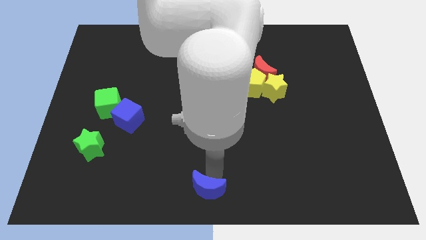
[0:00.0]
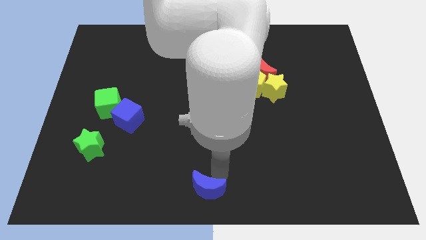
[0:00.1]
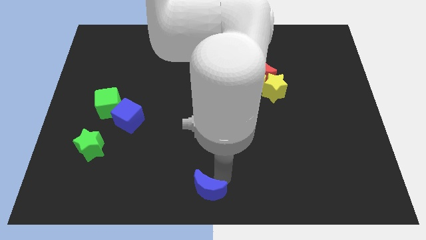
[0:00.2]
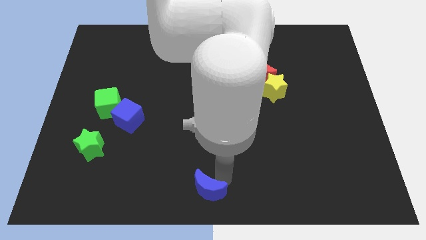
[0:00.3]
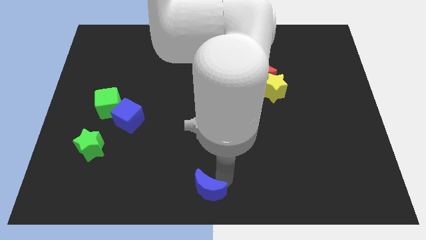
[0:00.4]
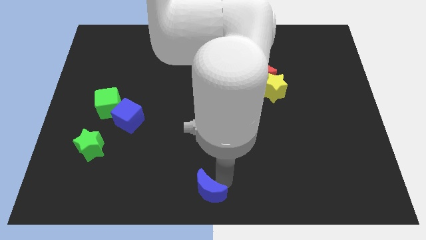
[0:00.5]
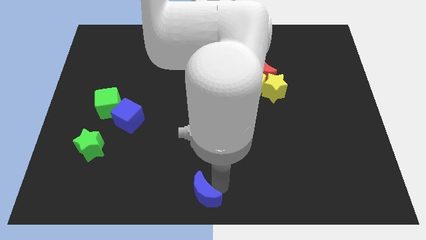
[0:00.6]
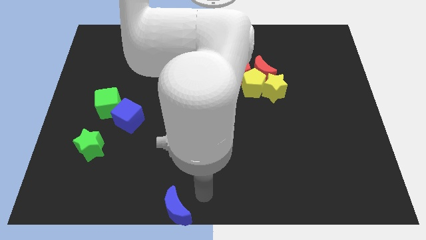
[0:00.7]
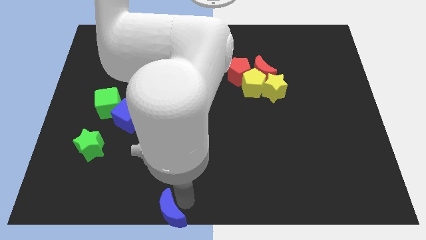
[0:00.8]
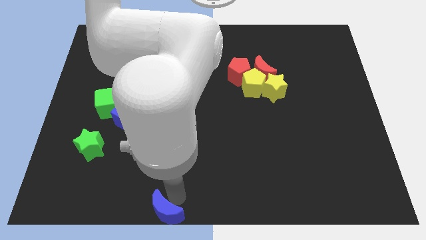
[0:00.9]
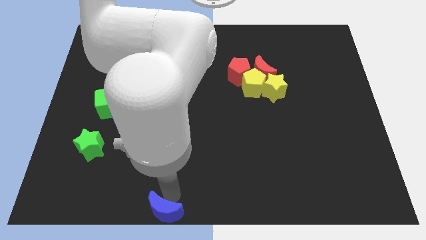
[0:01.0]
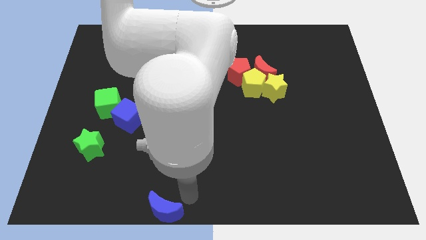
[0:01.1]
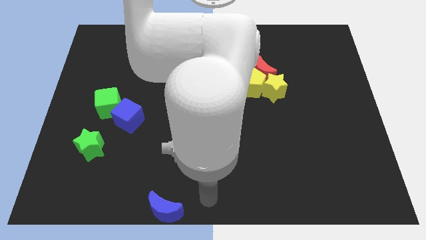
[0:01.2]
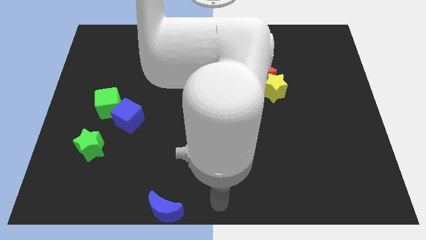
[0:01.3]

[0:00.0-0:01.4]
push the blue moon at bottom center

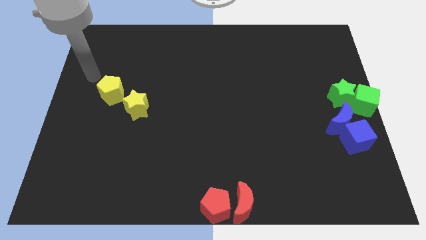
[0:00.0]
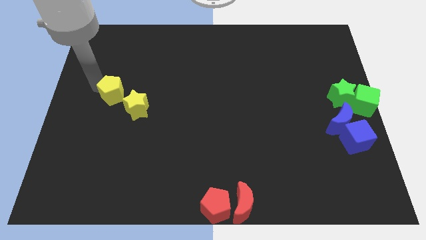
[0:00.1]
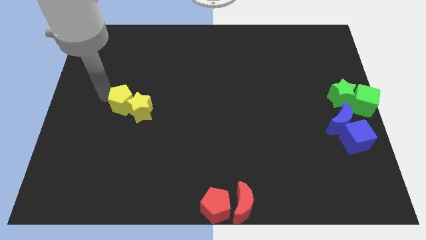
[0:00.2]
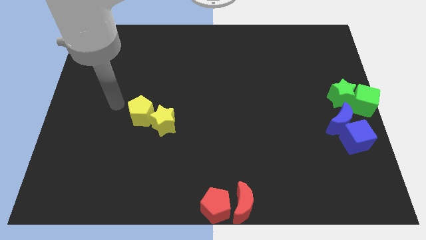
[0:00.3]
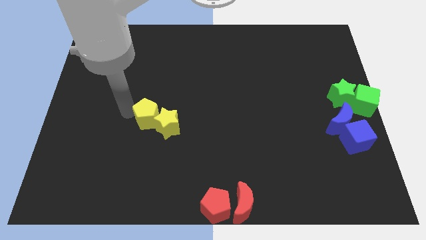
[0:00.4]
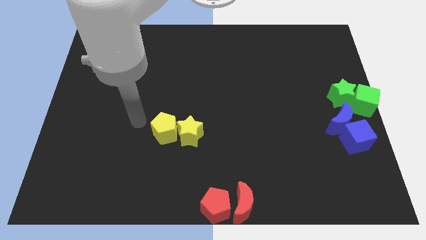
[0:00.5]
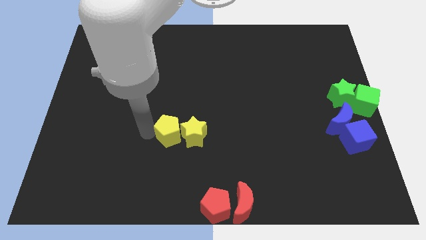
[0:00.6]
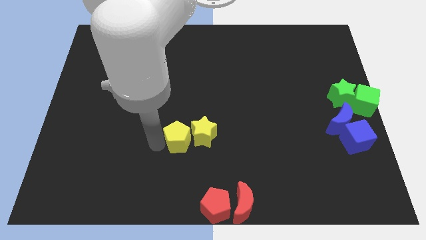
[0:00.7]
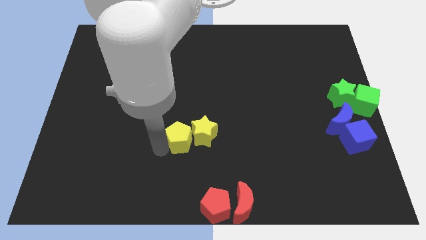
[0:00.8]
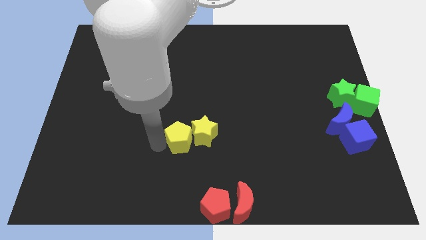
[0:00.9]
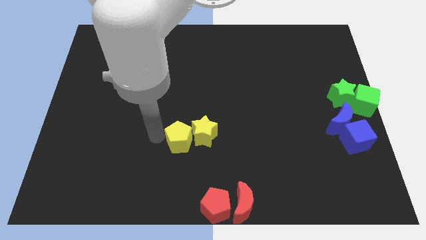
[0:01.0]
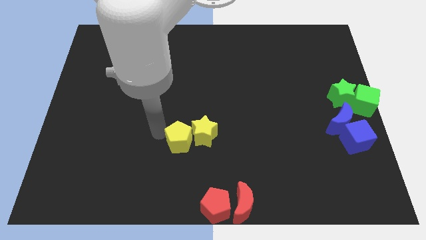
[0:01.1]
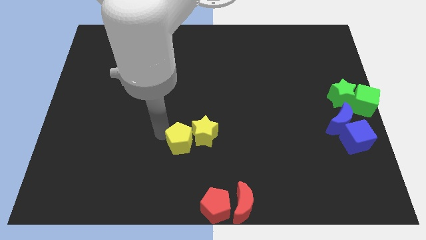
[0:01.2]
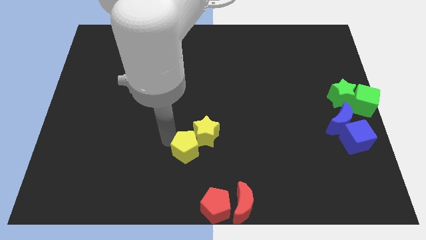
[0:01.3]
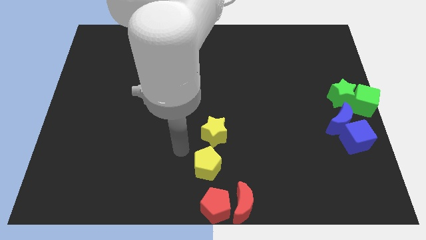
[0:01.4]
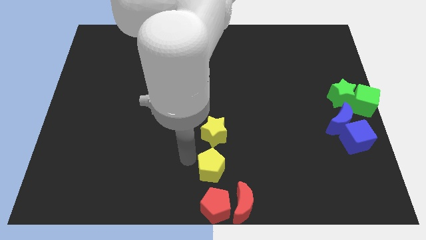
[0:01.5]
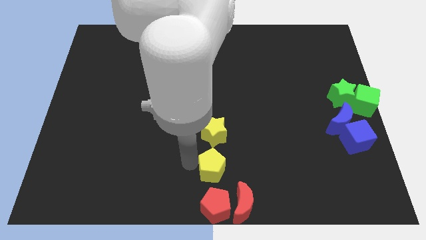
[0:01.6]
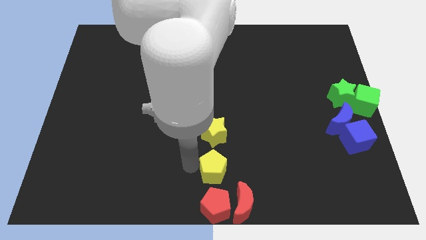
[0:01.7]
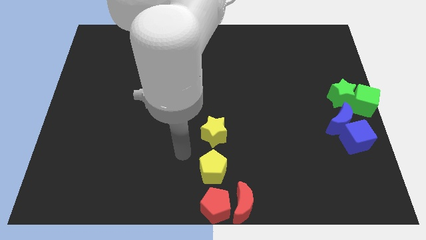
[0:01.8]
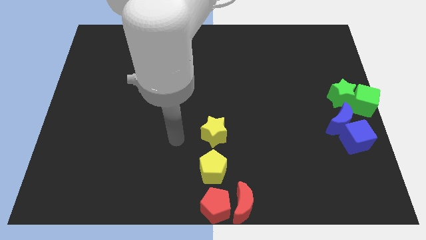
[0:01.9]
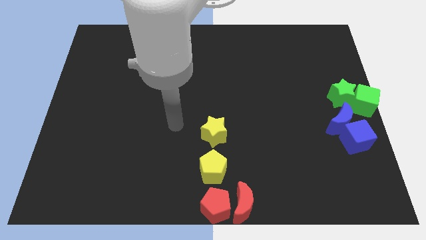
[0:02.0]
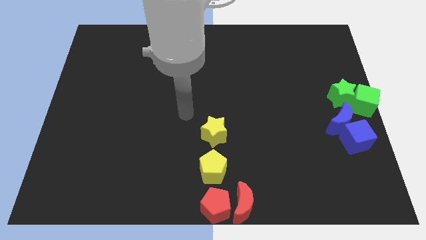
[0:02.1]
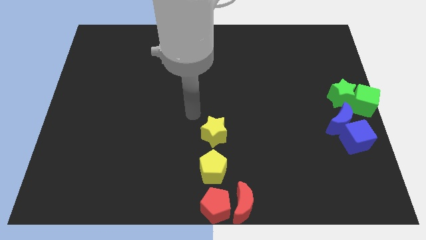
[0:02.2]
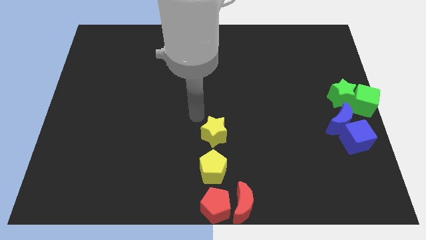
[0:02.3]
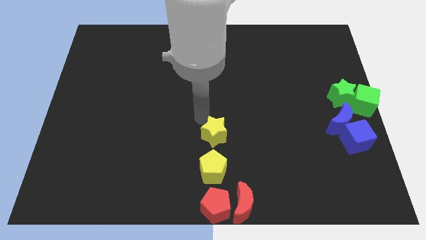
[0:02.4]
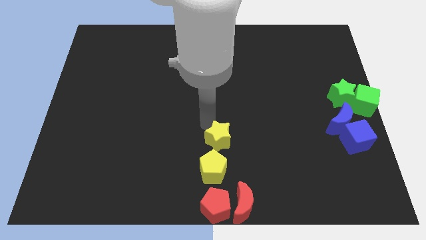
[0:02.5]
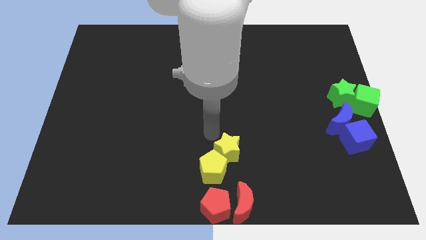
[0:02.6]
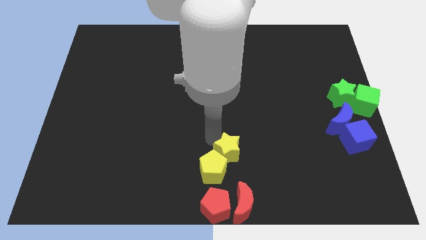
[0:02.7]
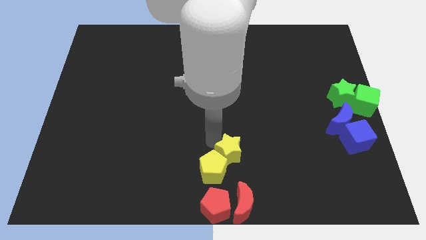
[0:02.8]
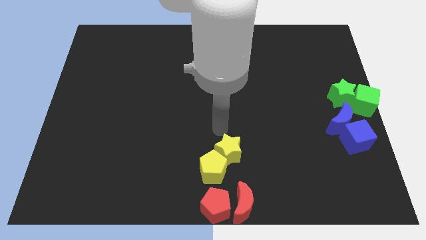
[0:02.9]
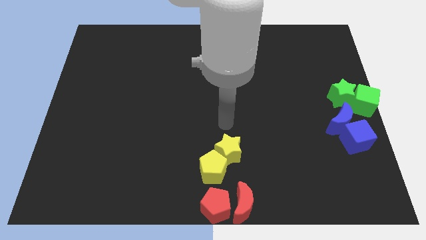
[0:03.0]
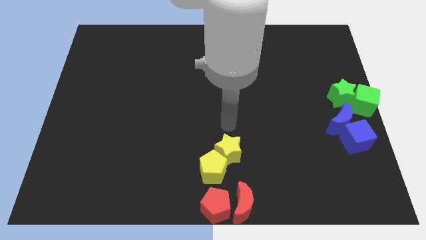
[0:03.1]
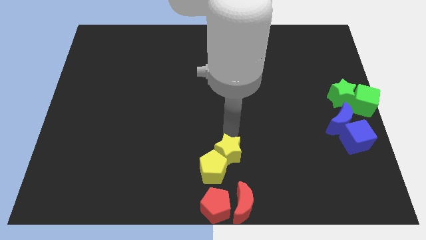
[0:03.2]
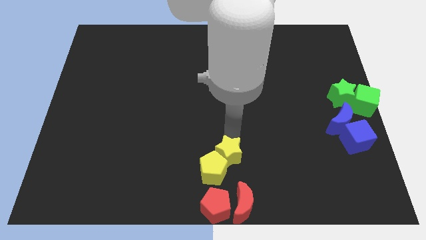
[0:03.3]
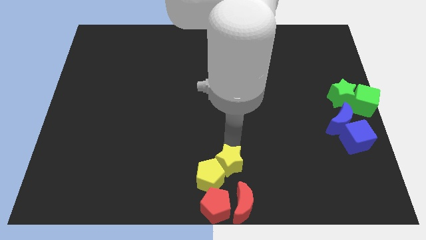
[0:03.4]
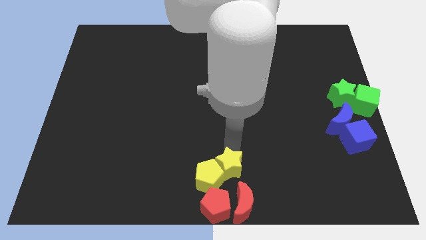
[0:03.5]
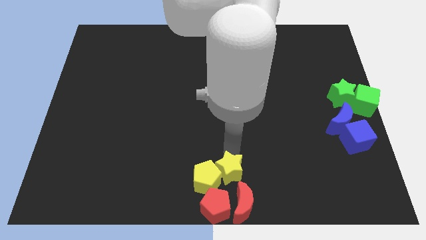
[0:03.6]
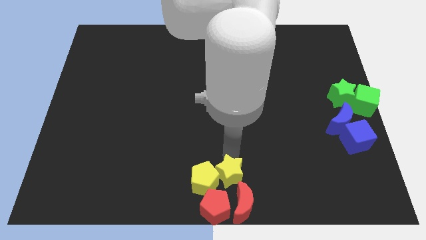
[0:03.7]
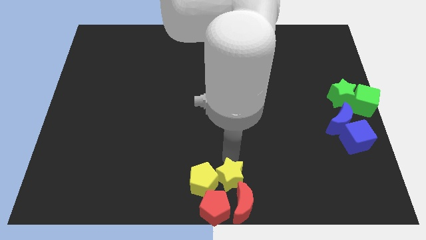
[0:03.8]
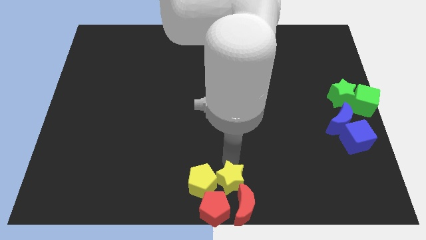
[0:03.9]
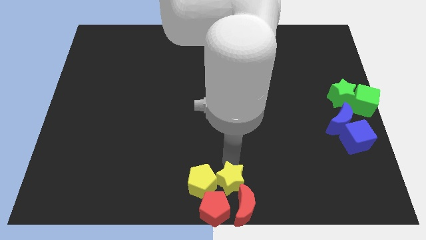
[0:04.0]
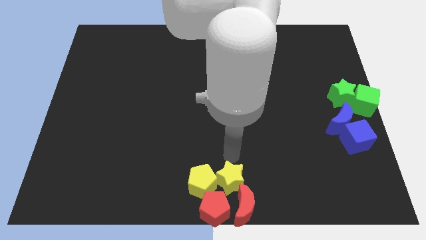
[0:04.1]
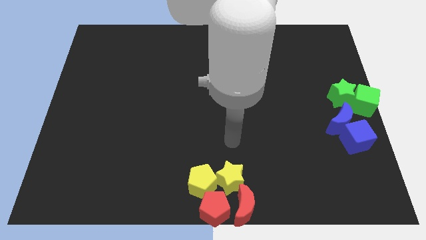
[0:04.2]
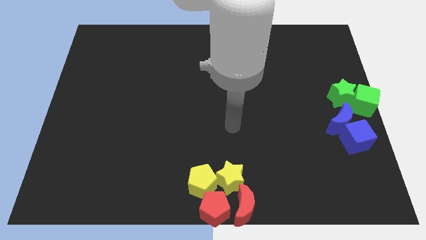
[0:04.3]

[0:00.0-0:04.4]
place the yellow blocks above the red blocks

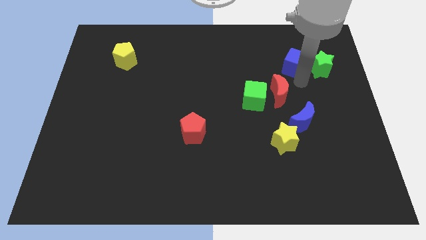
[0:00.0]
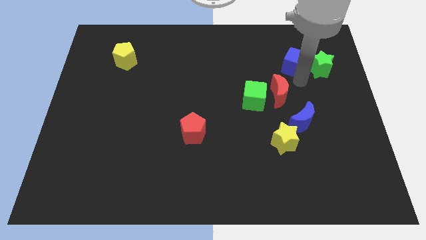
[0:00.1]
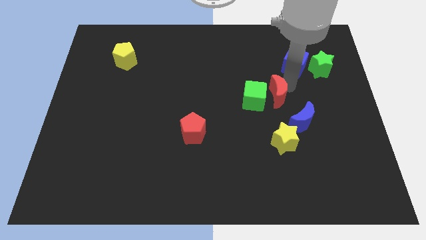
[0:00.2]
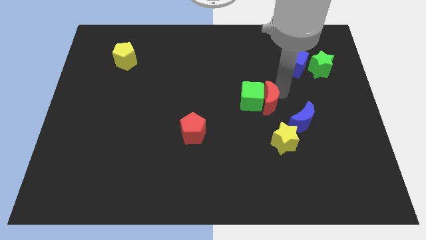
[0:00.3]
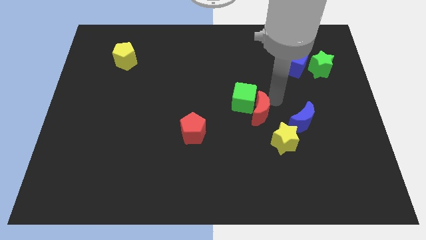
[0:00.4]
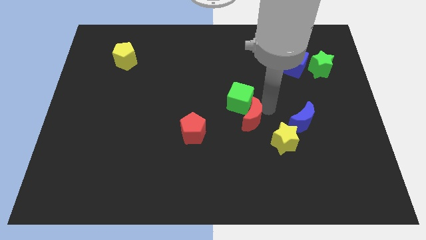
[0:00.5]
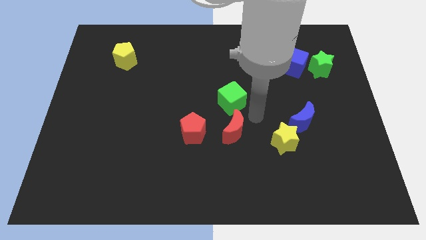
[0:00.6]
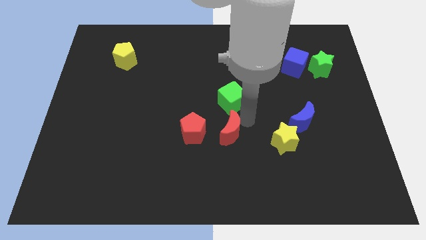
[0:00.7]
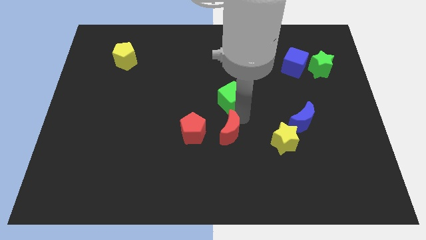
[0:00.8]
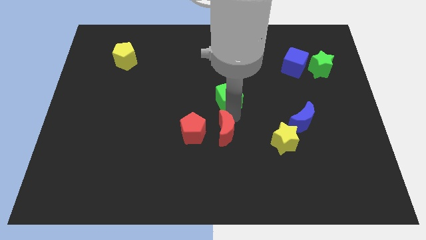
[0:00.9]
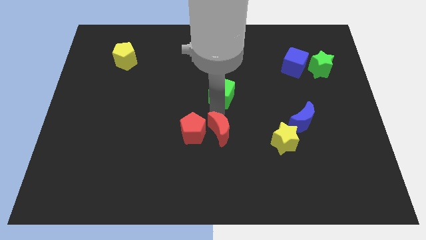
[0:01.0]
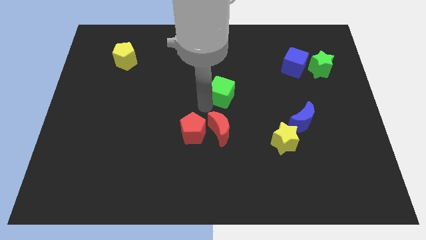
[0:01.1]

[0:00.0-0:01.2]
move the red crescent to the right of the red pentagon

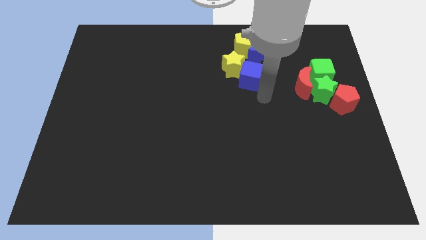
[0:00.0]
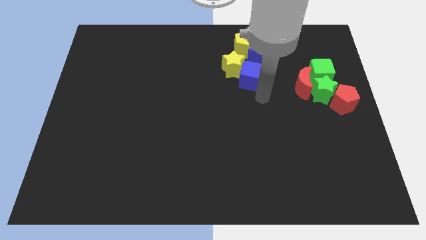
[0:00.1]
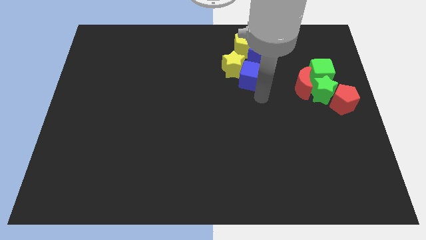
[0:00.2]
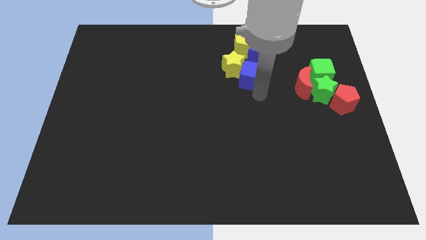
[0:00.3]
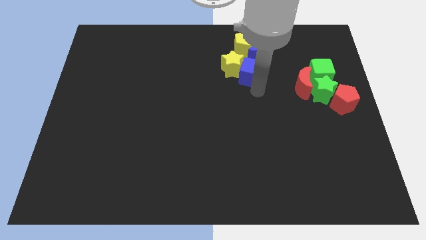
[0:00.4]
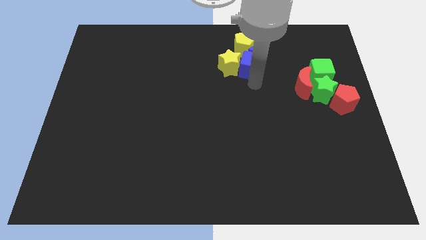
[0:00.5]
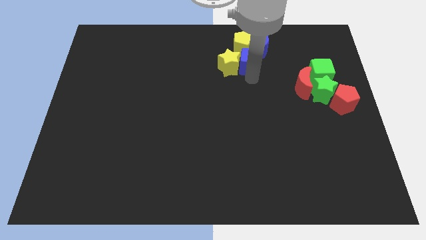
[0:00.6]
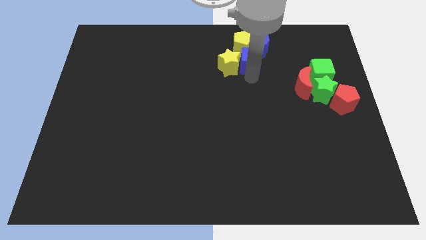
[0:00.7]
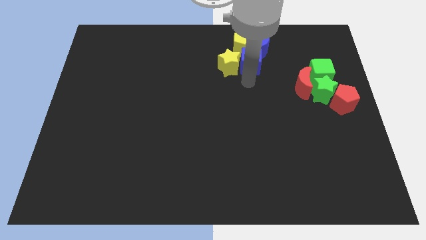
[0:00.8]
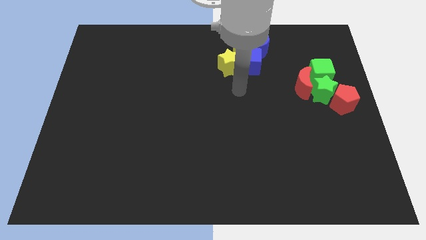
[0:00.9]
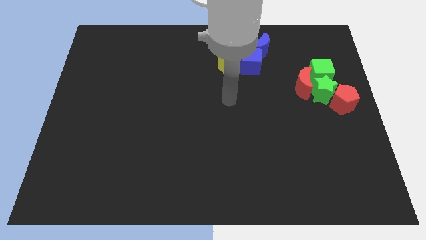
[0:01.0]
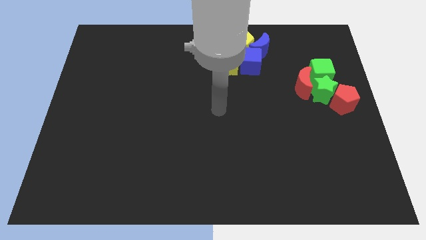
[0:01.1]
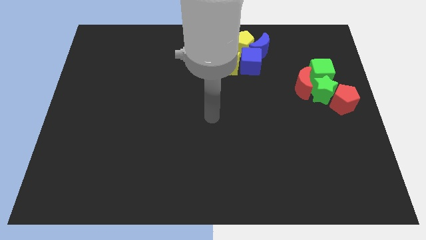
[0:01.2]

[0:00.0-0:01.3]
move the blue cube into the blue moon

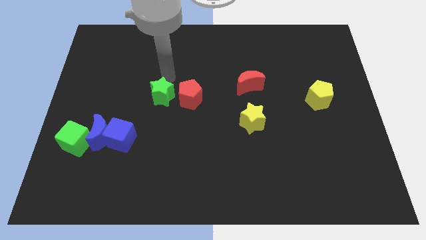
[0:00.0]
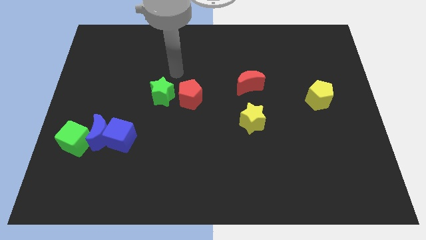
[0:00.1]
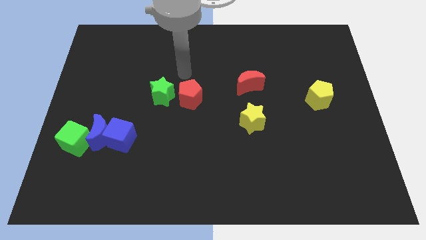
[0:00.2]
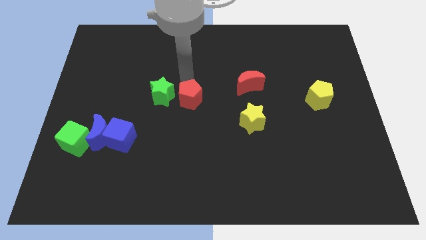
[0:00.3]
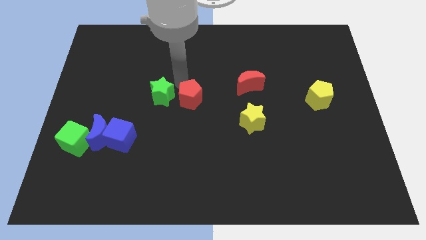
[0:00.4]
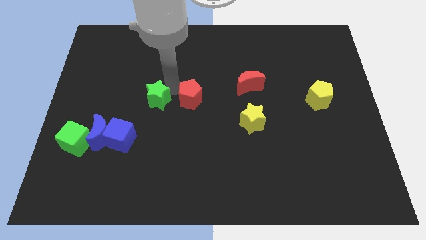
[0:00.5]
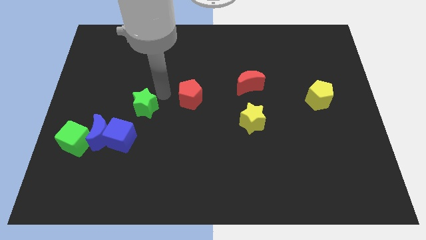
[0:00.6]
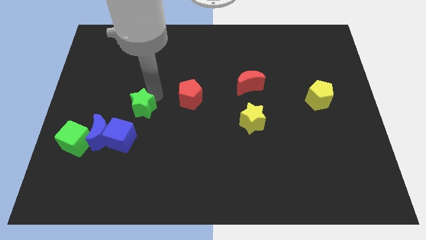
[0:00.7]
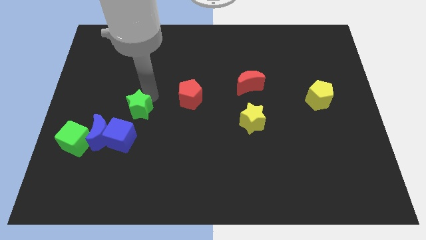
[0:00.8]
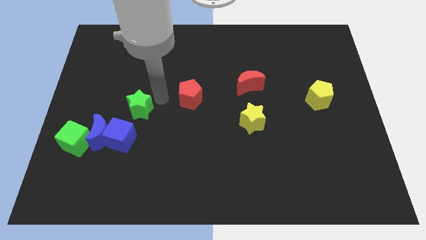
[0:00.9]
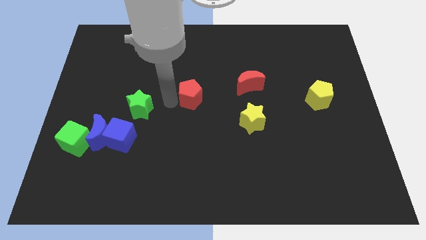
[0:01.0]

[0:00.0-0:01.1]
push the green star near blue cube
